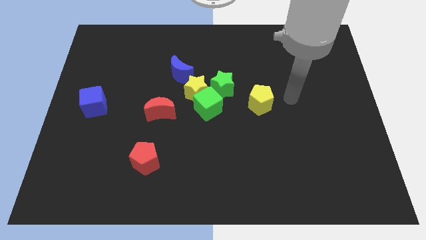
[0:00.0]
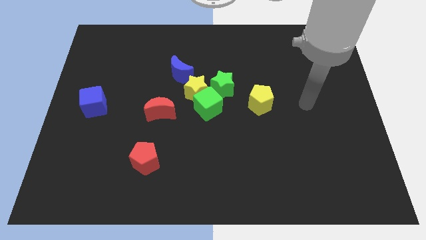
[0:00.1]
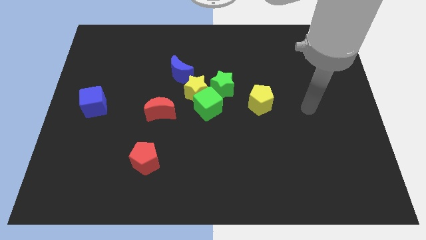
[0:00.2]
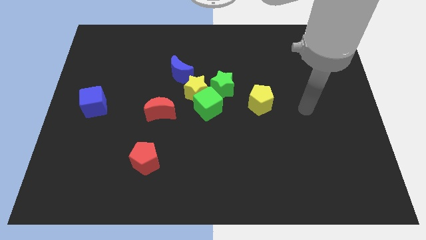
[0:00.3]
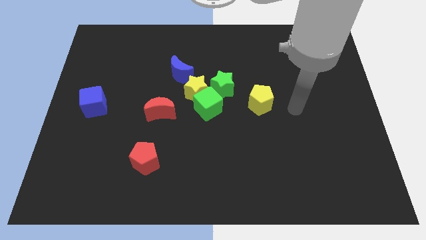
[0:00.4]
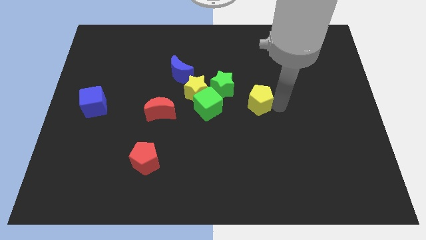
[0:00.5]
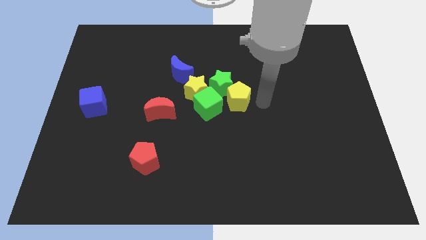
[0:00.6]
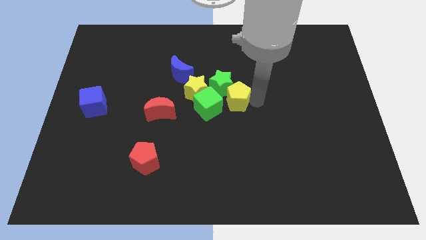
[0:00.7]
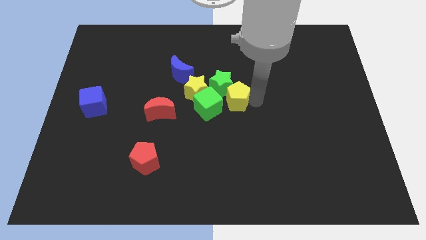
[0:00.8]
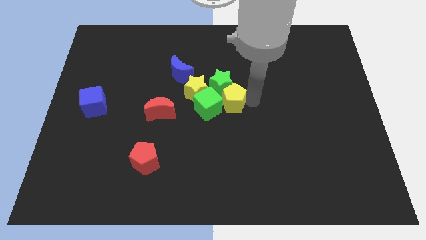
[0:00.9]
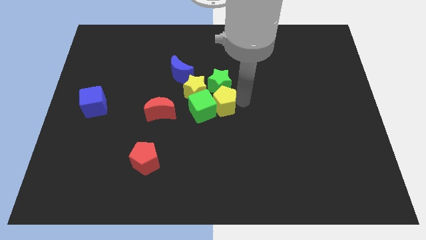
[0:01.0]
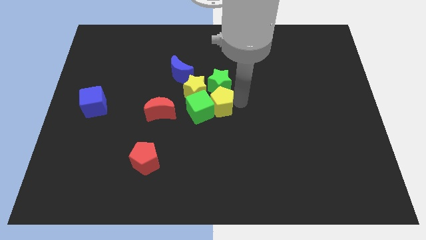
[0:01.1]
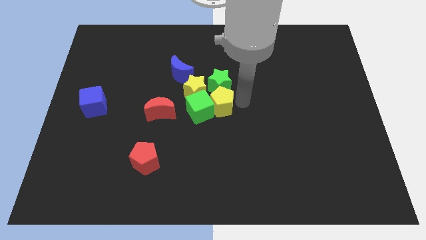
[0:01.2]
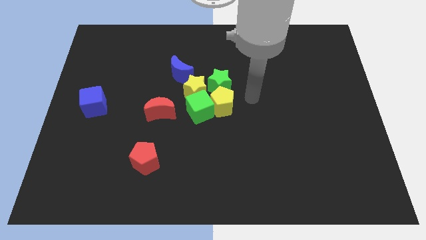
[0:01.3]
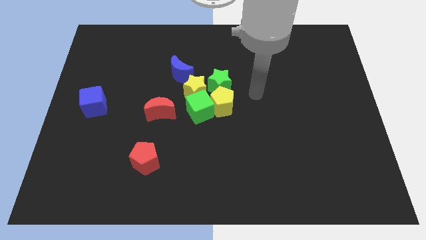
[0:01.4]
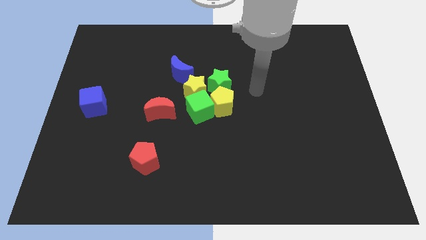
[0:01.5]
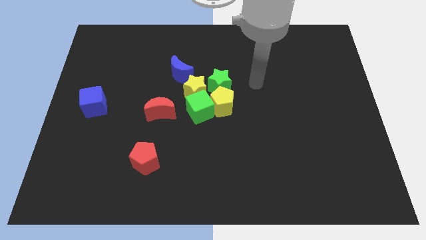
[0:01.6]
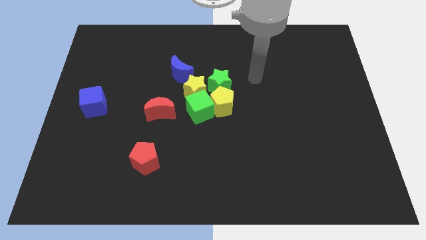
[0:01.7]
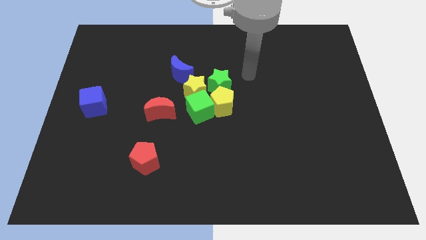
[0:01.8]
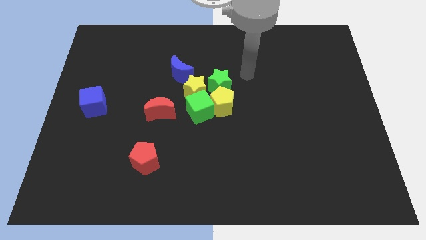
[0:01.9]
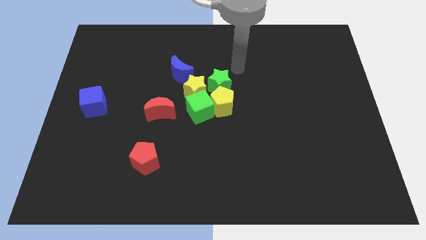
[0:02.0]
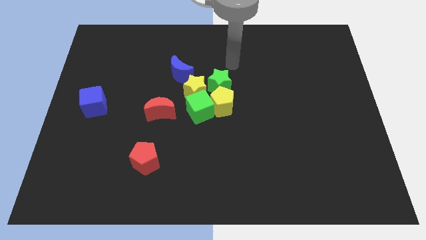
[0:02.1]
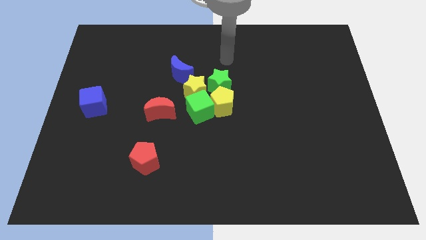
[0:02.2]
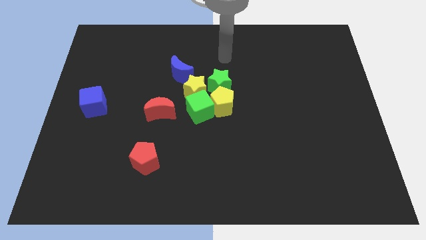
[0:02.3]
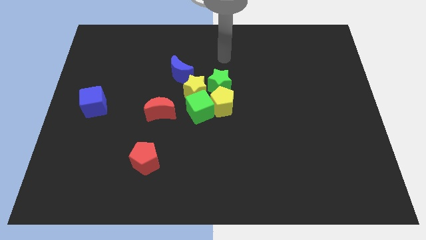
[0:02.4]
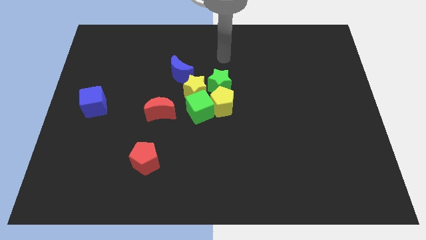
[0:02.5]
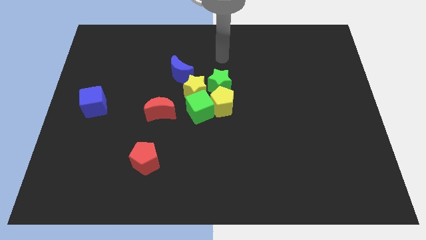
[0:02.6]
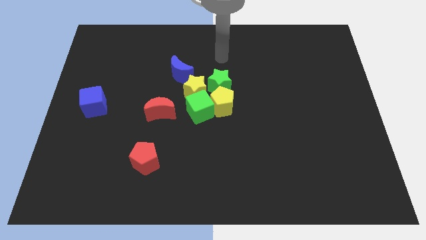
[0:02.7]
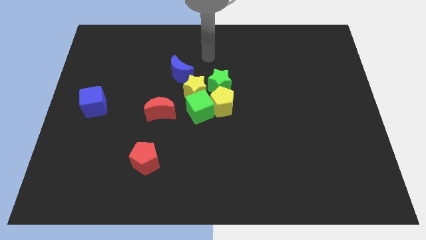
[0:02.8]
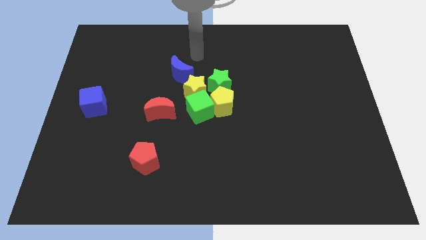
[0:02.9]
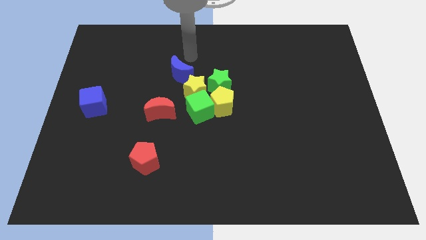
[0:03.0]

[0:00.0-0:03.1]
place the yellow pentagon towards the green cube and green star

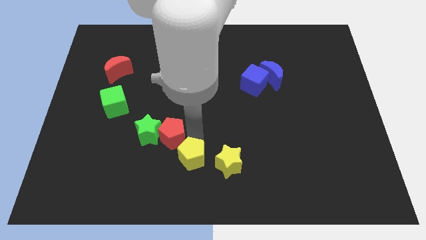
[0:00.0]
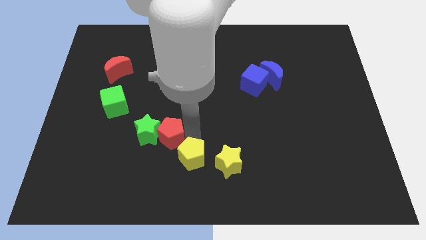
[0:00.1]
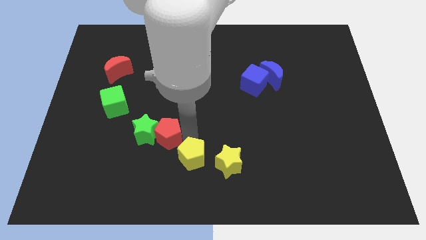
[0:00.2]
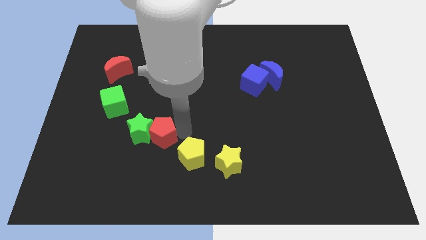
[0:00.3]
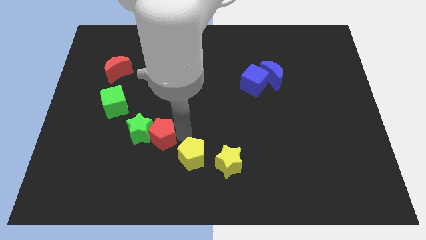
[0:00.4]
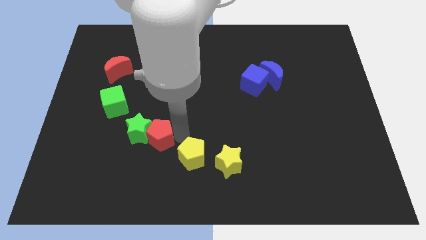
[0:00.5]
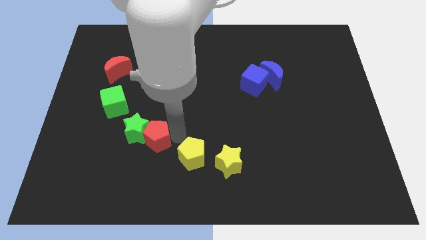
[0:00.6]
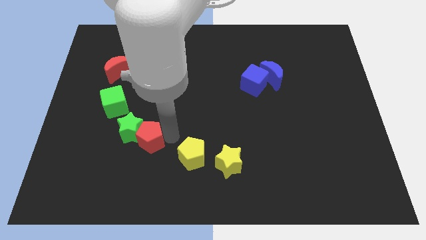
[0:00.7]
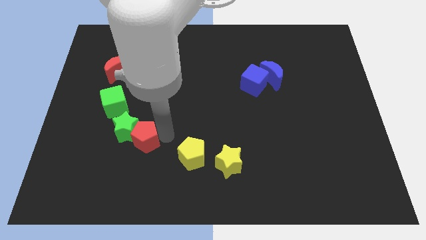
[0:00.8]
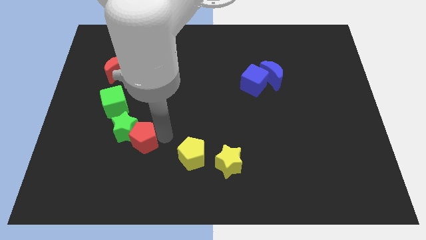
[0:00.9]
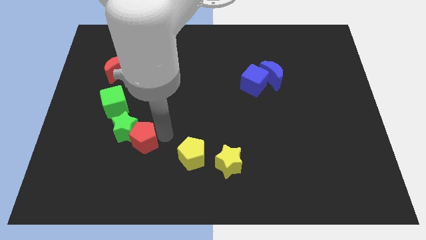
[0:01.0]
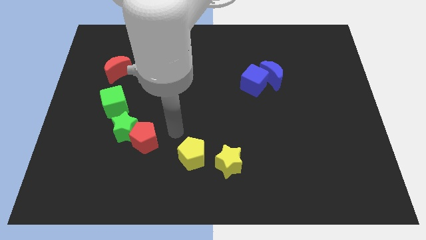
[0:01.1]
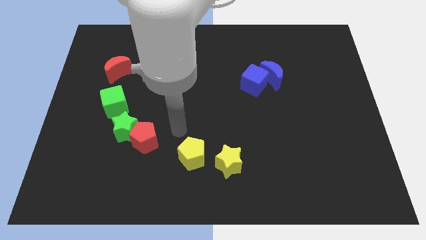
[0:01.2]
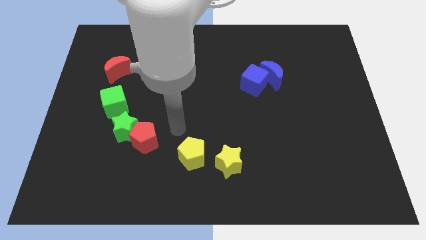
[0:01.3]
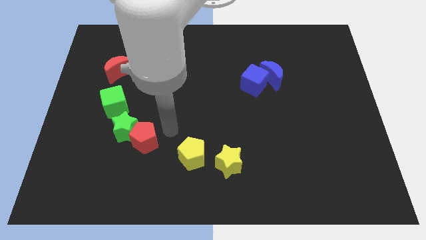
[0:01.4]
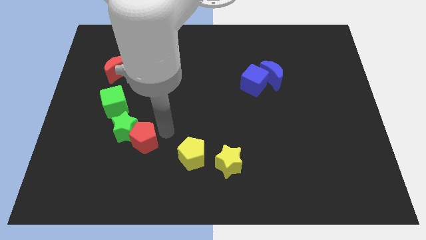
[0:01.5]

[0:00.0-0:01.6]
push the red pentagon into the green star

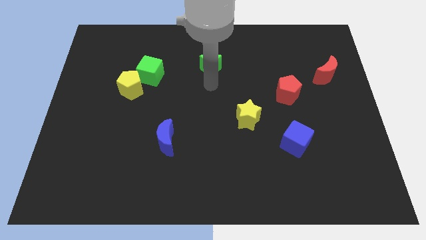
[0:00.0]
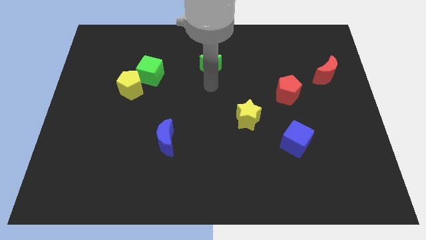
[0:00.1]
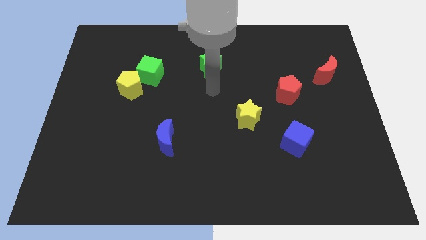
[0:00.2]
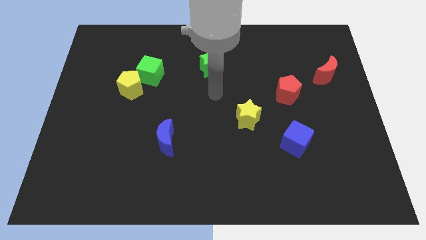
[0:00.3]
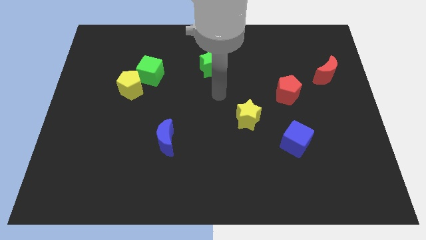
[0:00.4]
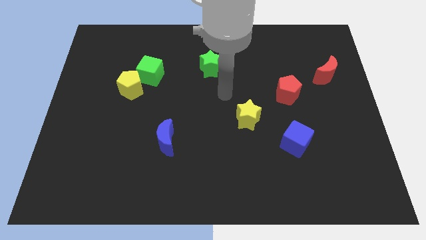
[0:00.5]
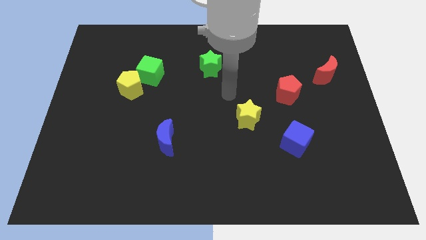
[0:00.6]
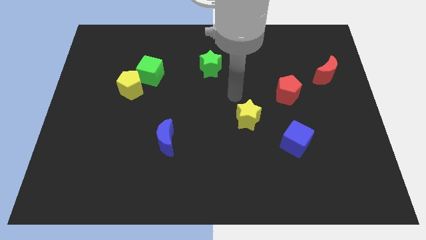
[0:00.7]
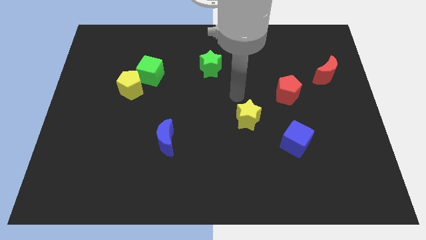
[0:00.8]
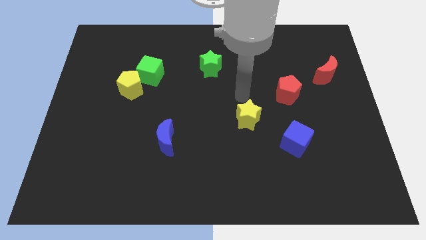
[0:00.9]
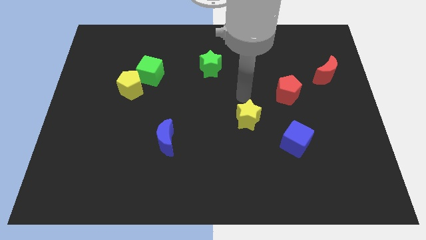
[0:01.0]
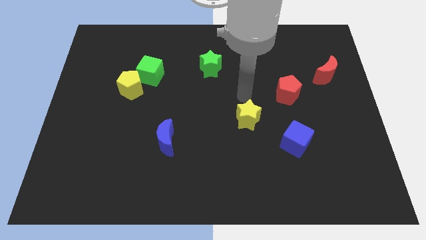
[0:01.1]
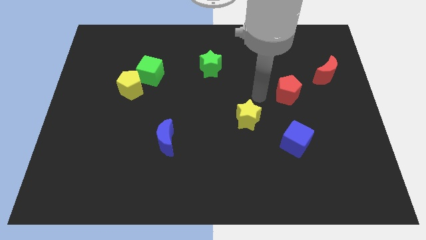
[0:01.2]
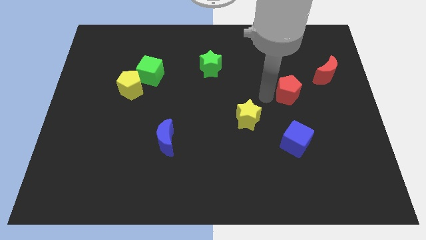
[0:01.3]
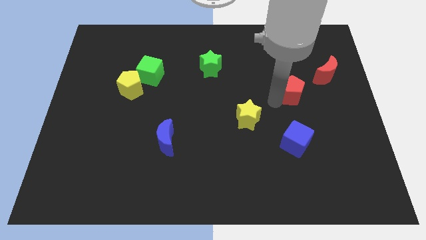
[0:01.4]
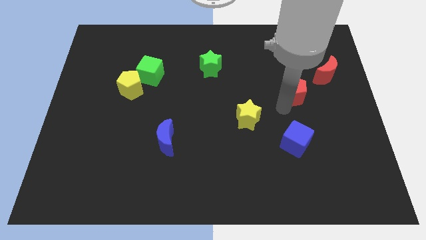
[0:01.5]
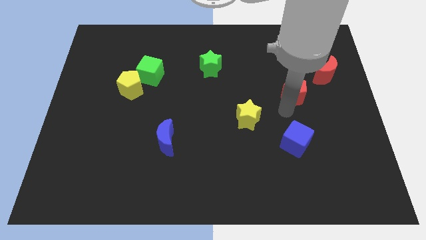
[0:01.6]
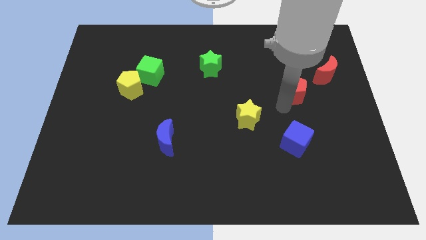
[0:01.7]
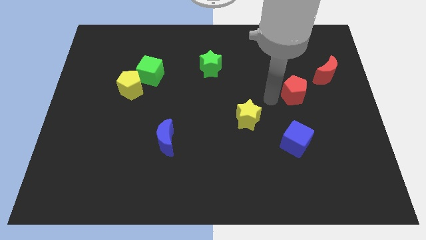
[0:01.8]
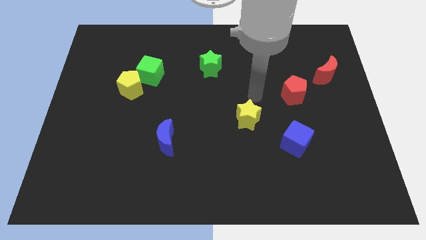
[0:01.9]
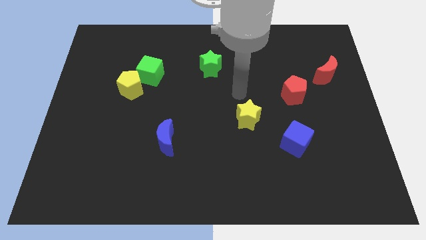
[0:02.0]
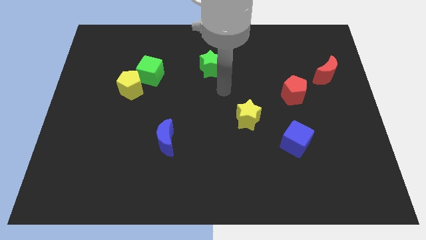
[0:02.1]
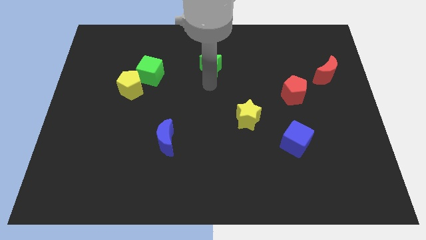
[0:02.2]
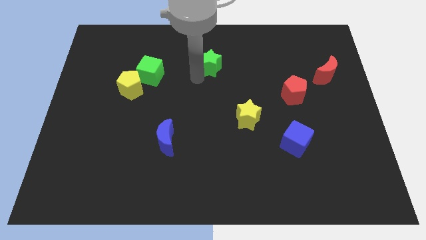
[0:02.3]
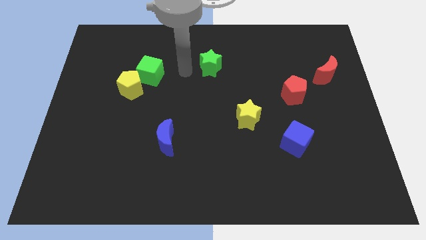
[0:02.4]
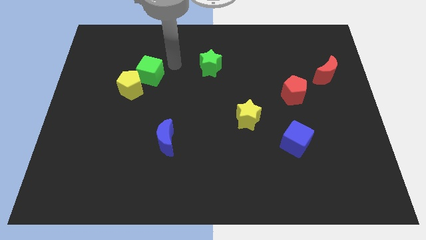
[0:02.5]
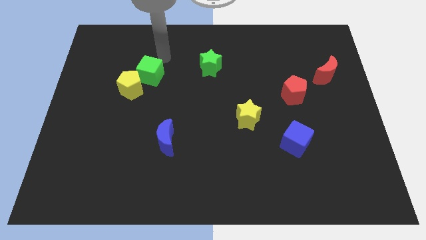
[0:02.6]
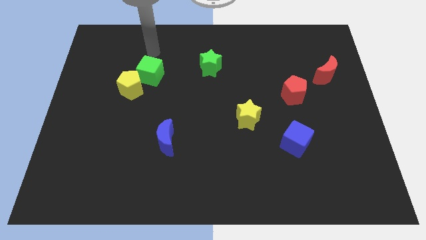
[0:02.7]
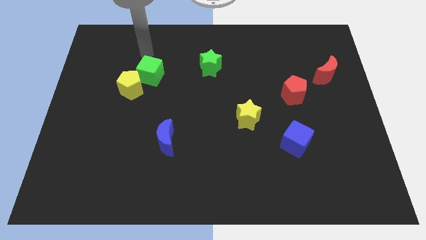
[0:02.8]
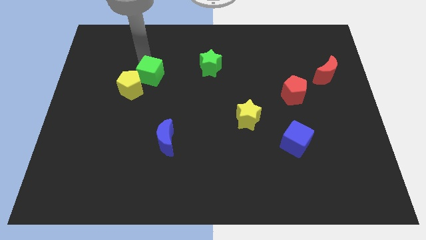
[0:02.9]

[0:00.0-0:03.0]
push red pentagon slightly towards right

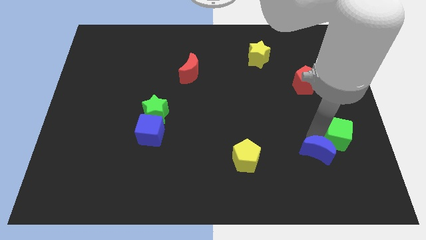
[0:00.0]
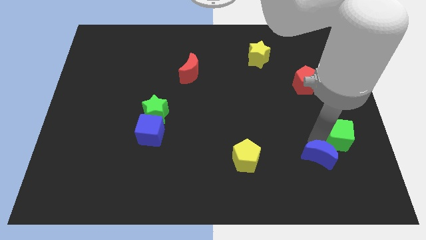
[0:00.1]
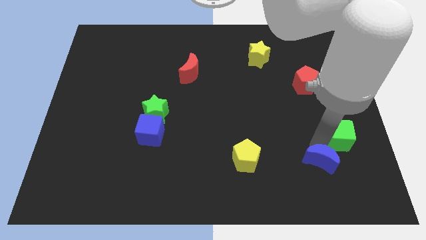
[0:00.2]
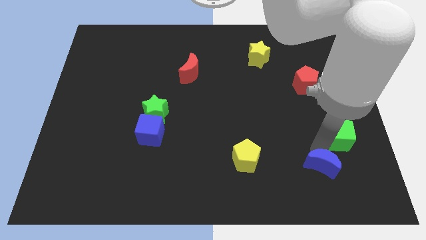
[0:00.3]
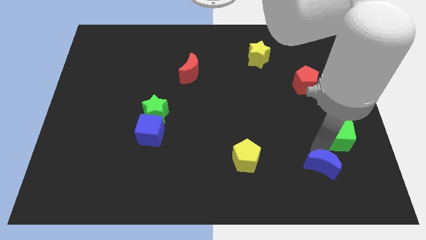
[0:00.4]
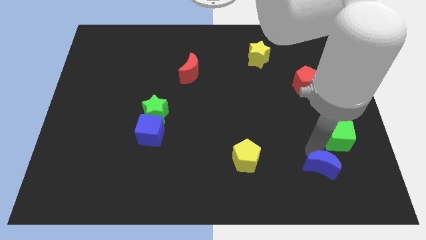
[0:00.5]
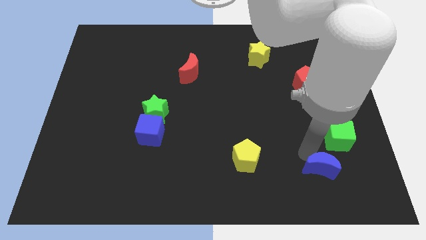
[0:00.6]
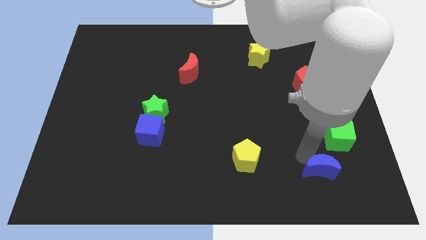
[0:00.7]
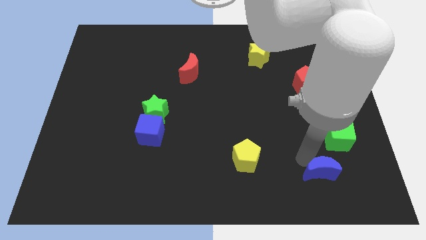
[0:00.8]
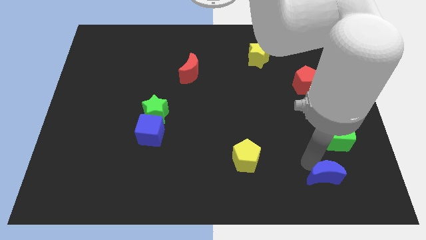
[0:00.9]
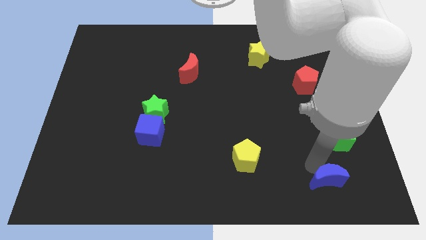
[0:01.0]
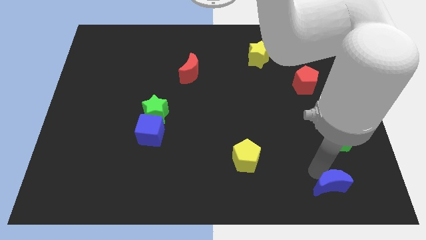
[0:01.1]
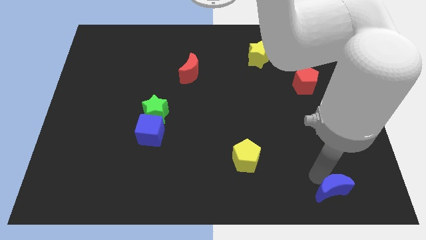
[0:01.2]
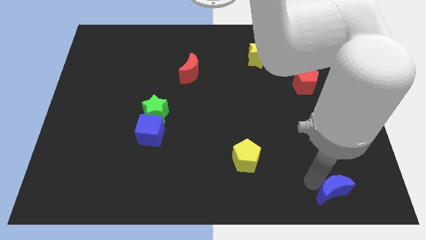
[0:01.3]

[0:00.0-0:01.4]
move the blue moon slightly bottom

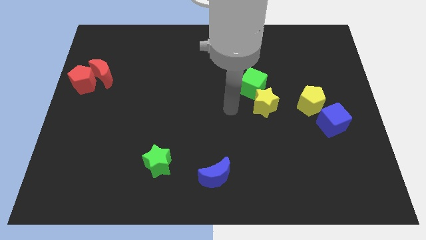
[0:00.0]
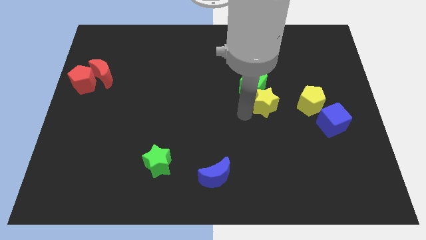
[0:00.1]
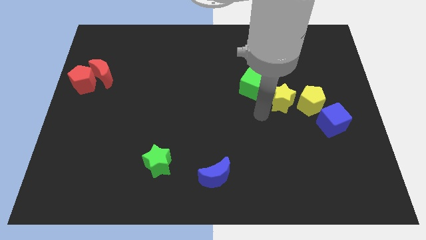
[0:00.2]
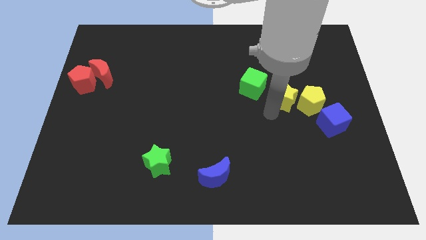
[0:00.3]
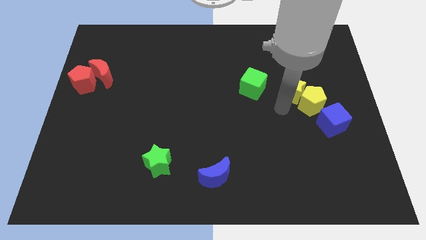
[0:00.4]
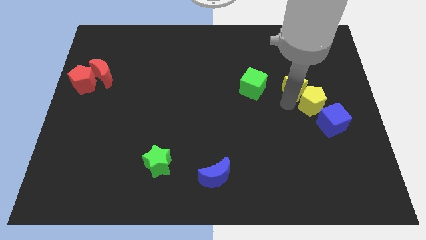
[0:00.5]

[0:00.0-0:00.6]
make the yellow star to touch the yellow pentagon
